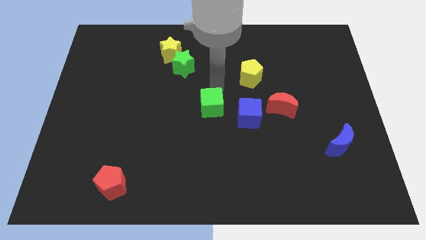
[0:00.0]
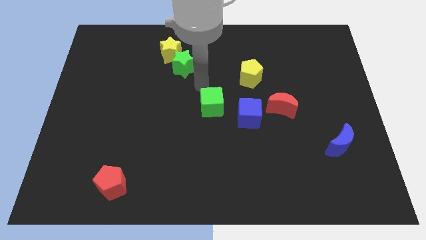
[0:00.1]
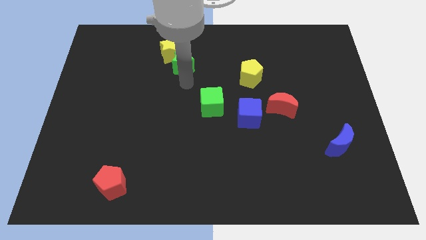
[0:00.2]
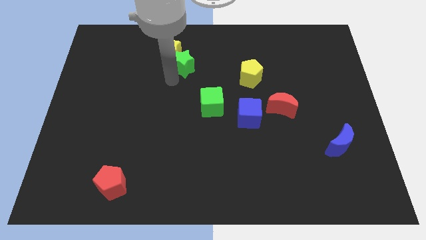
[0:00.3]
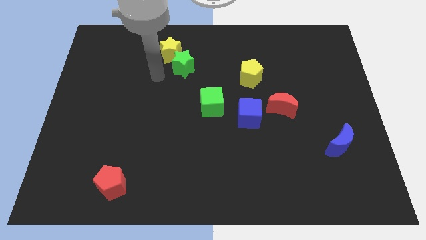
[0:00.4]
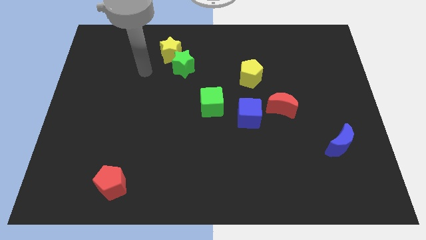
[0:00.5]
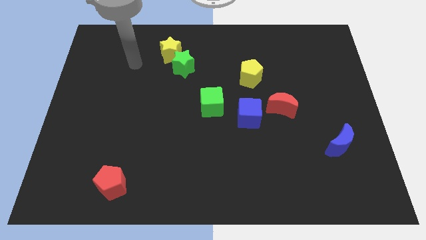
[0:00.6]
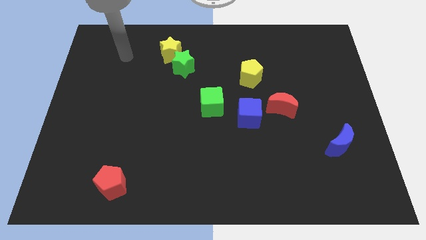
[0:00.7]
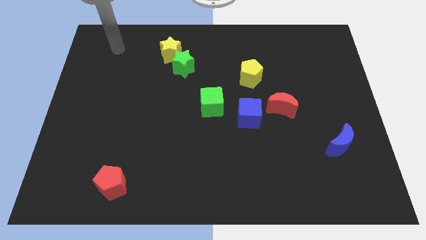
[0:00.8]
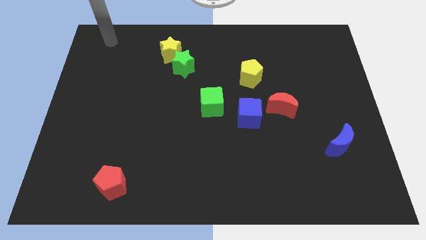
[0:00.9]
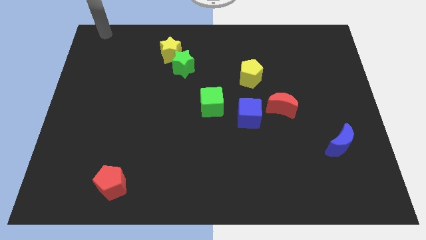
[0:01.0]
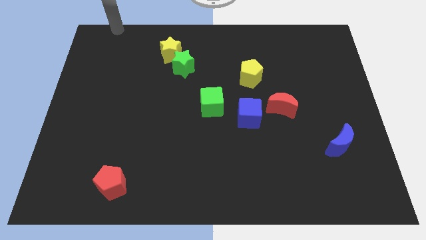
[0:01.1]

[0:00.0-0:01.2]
move your arm to the top left

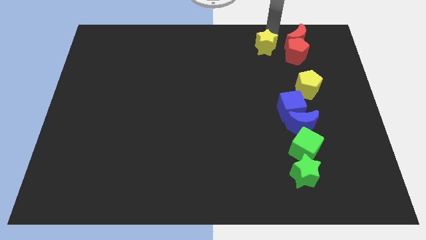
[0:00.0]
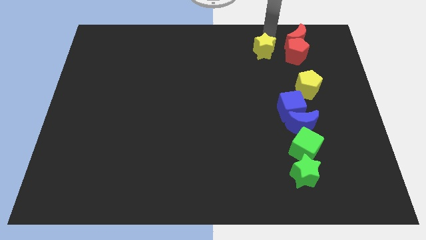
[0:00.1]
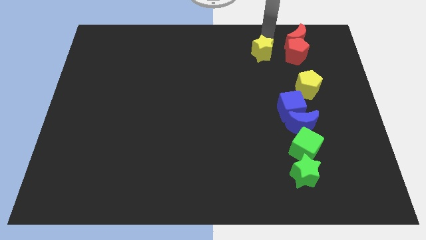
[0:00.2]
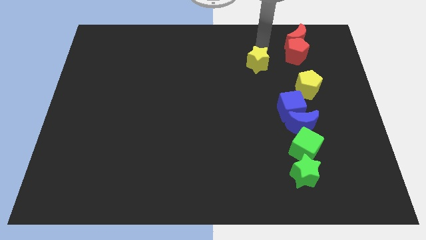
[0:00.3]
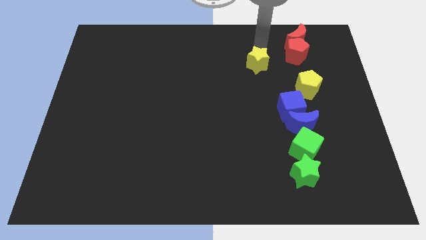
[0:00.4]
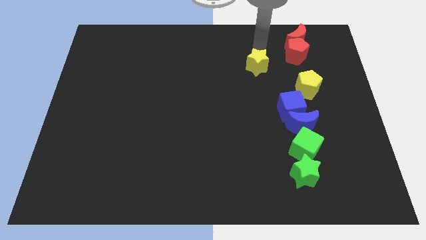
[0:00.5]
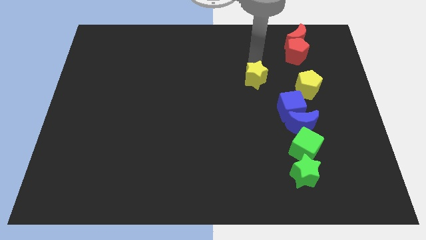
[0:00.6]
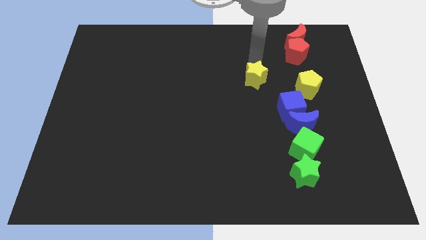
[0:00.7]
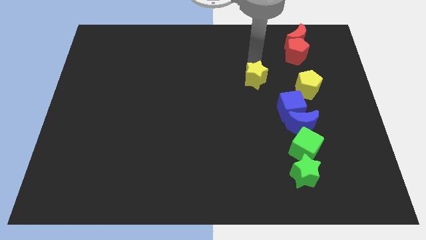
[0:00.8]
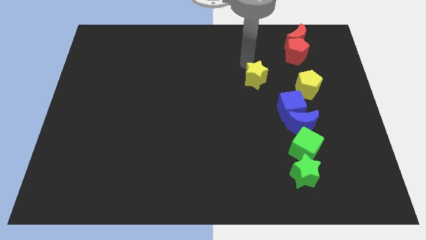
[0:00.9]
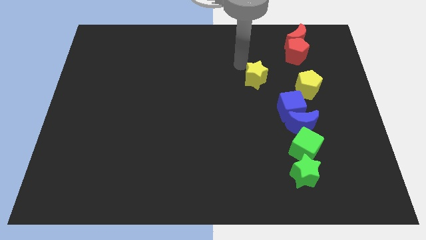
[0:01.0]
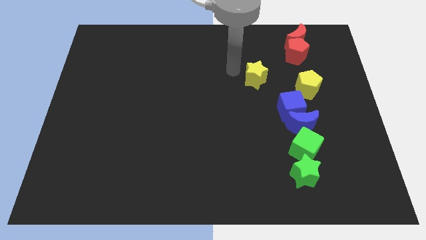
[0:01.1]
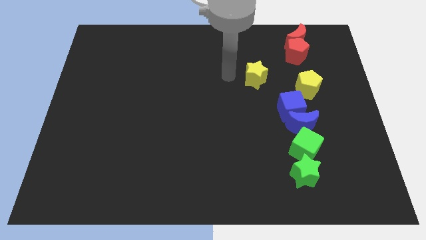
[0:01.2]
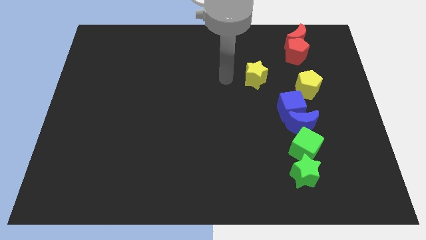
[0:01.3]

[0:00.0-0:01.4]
place the yellow star left to the yellow pentagon

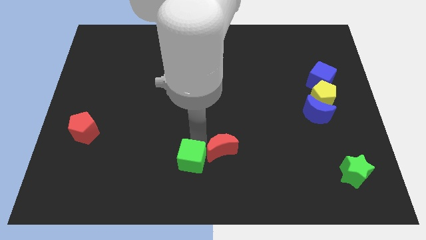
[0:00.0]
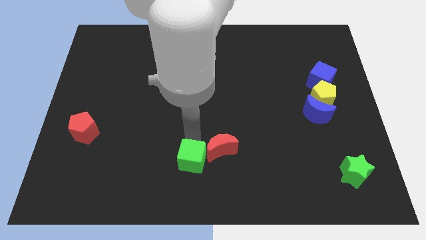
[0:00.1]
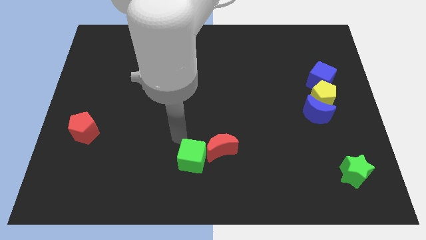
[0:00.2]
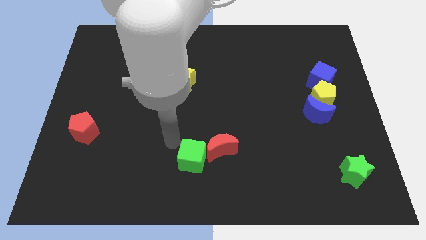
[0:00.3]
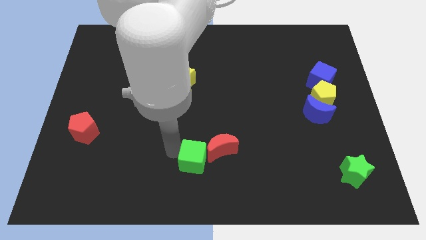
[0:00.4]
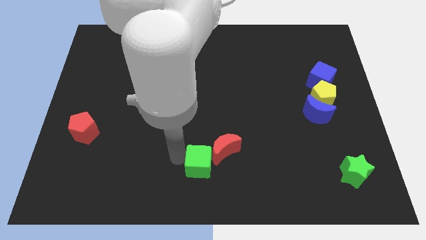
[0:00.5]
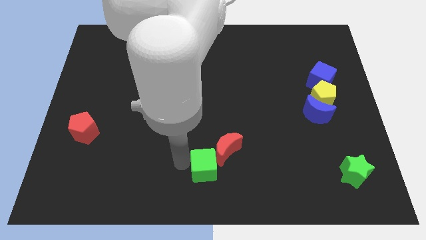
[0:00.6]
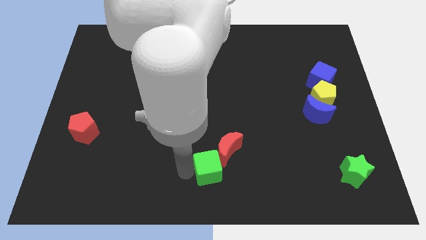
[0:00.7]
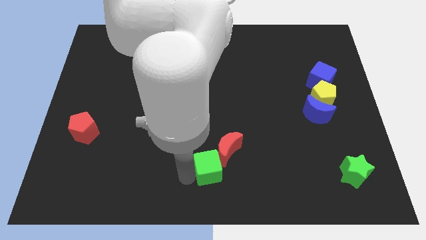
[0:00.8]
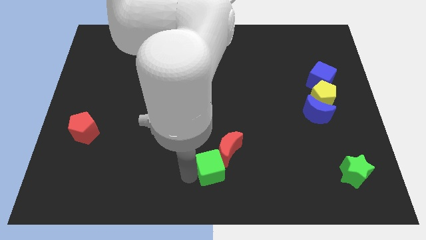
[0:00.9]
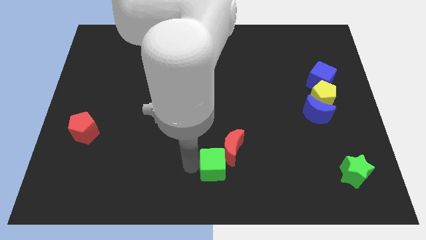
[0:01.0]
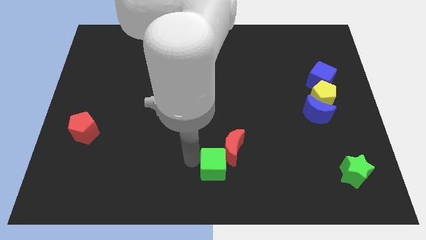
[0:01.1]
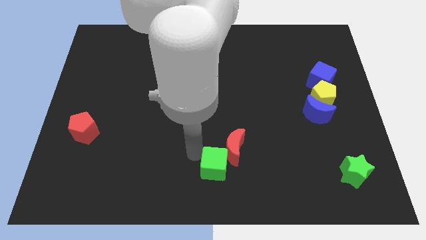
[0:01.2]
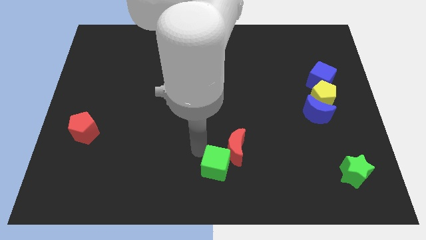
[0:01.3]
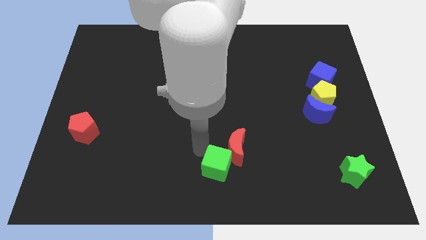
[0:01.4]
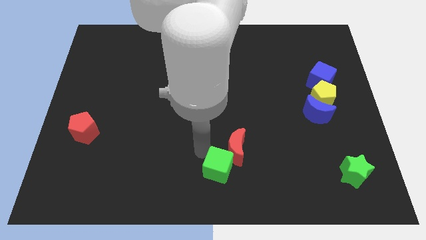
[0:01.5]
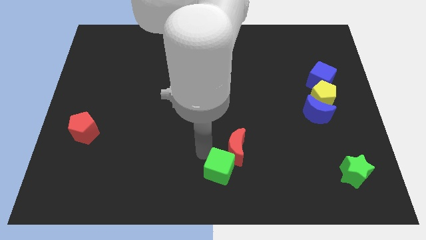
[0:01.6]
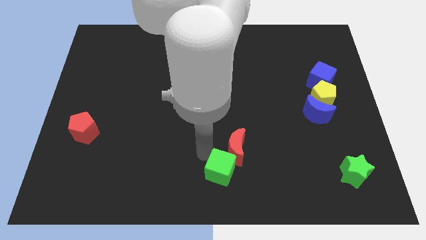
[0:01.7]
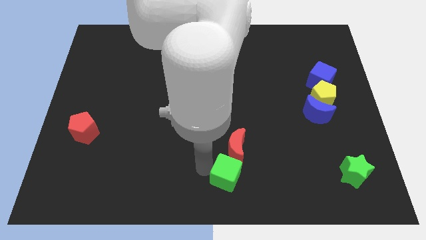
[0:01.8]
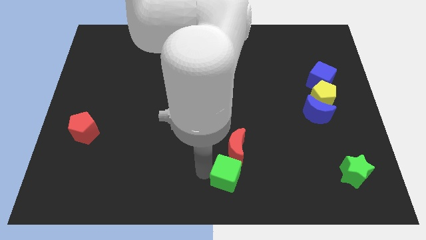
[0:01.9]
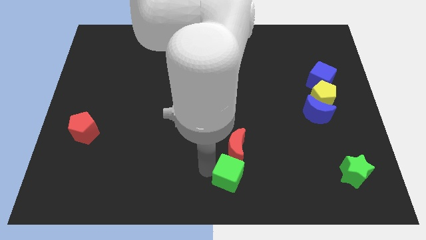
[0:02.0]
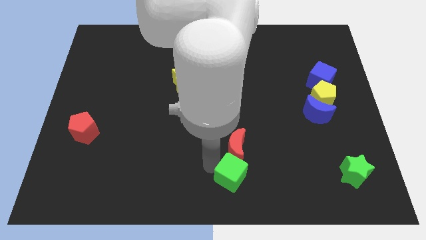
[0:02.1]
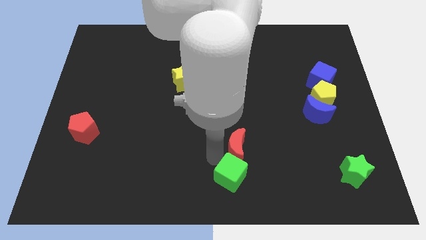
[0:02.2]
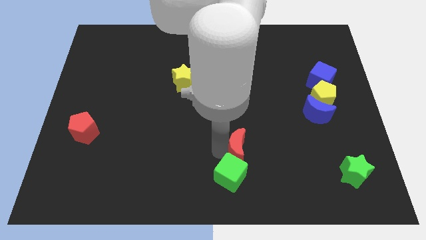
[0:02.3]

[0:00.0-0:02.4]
move the green cube below the red moon

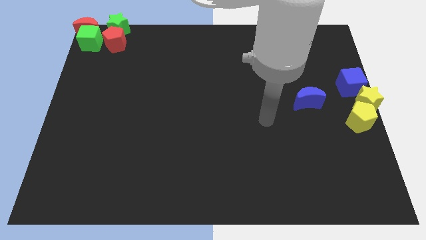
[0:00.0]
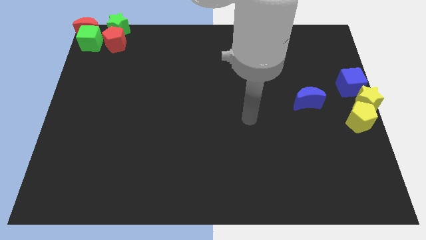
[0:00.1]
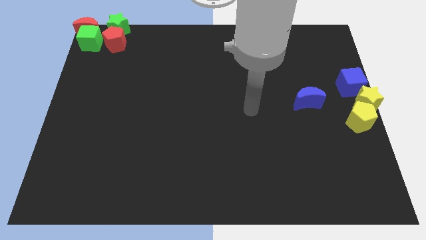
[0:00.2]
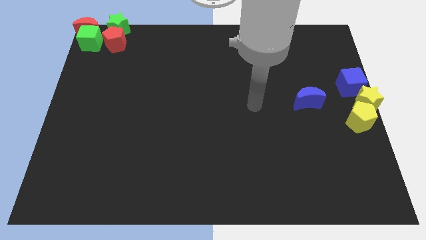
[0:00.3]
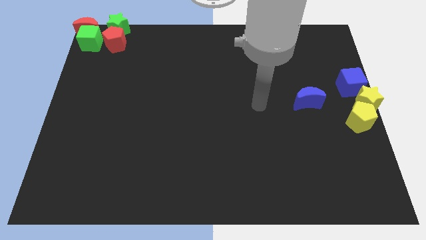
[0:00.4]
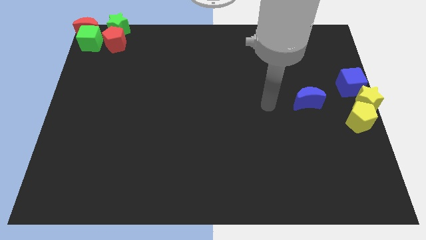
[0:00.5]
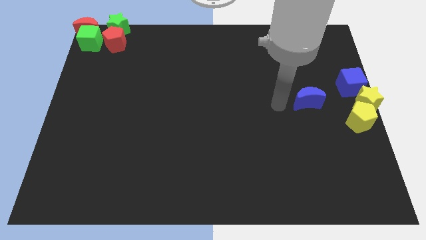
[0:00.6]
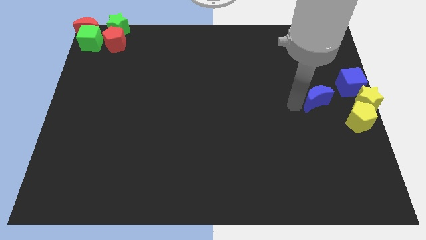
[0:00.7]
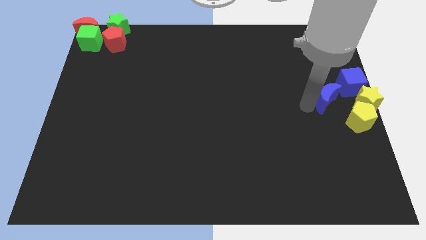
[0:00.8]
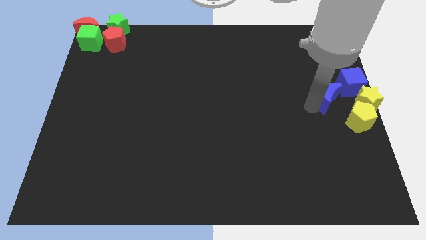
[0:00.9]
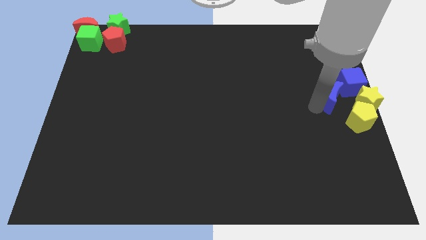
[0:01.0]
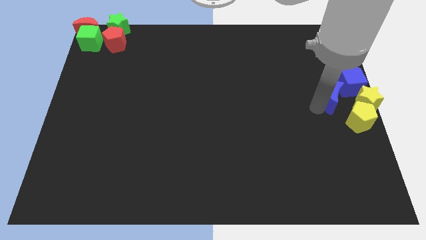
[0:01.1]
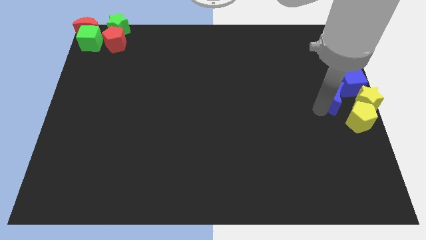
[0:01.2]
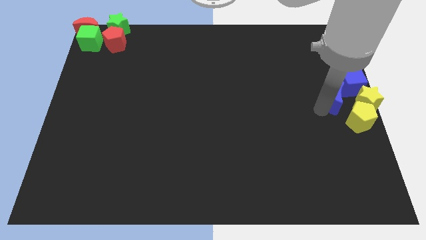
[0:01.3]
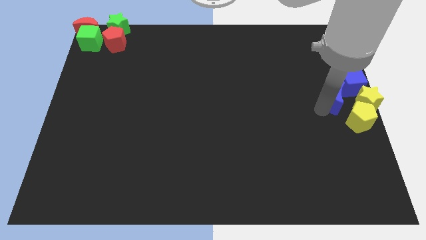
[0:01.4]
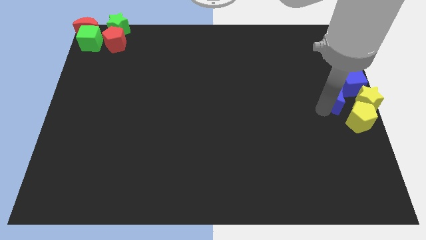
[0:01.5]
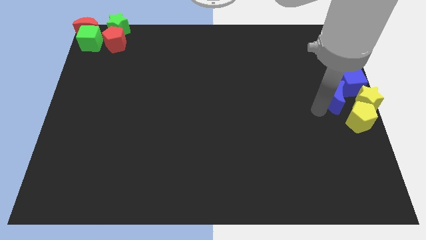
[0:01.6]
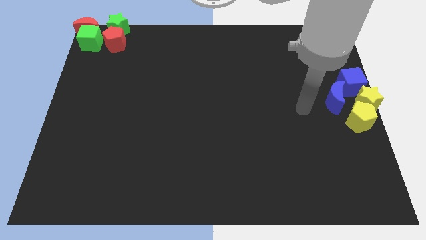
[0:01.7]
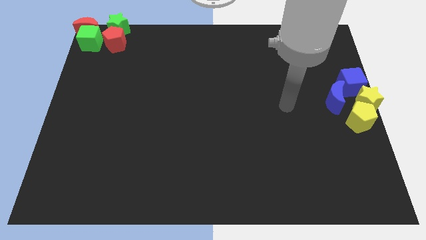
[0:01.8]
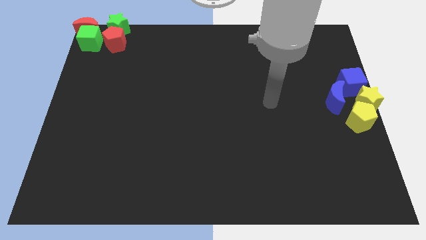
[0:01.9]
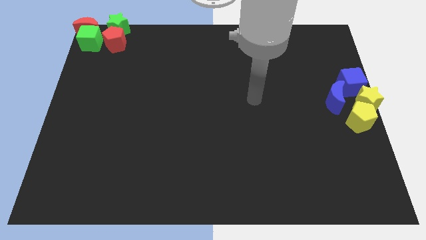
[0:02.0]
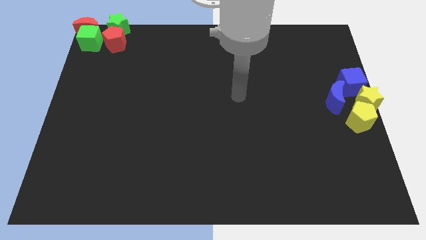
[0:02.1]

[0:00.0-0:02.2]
put the blue moon into the blue cube

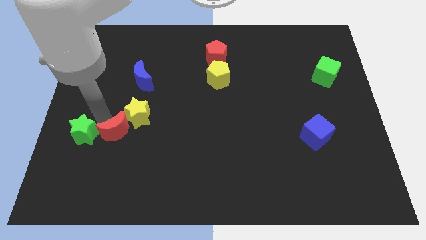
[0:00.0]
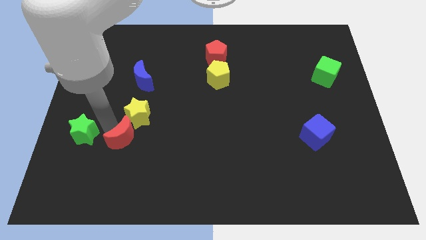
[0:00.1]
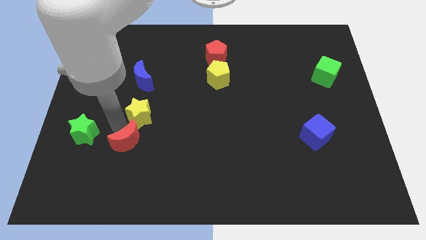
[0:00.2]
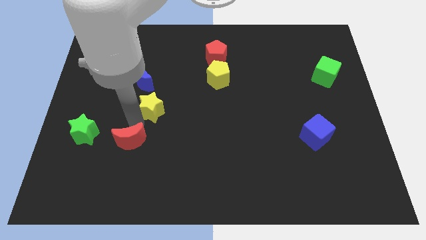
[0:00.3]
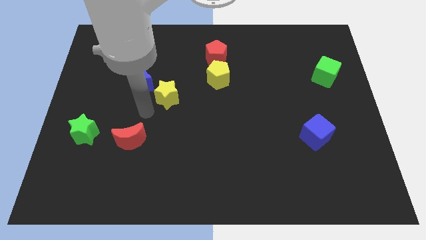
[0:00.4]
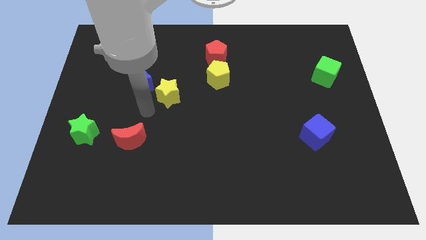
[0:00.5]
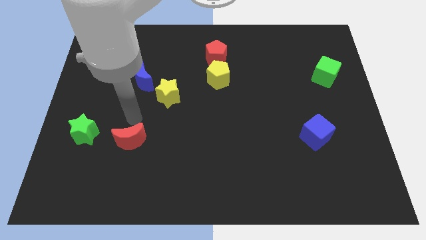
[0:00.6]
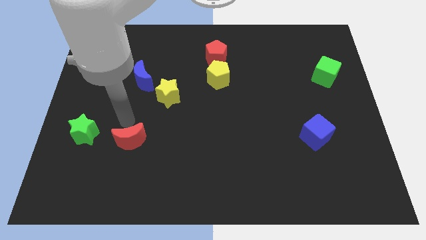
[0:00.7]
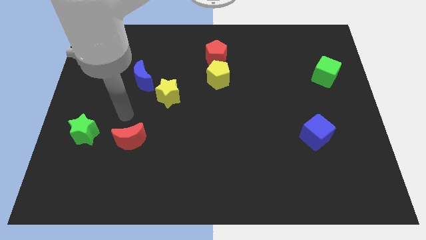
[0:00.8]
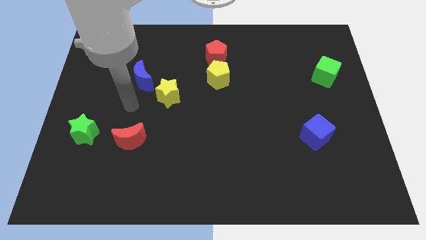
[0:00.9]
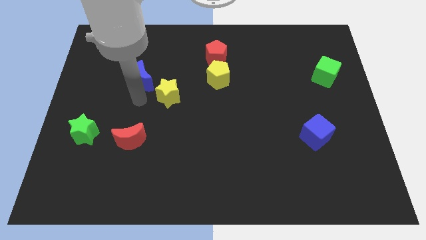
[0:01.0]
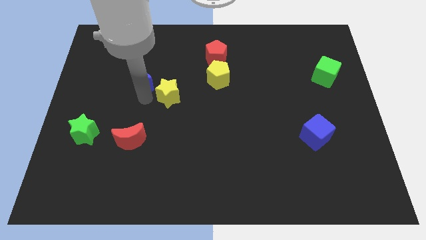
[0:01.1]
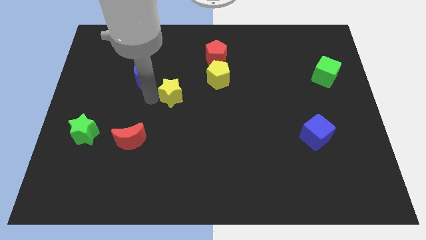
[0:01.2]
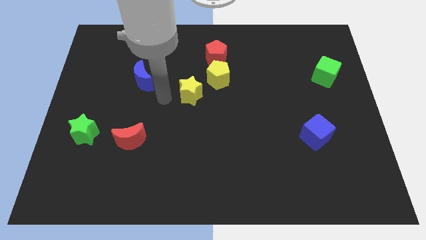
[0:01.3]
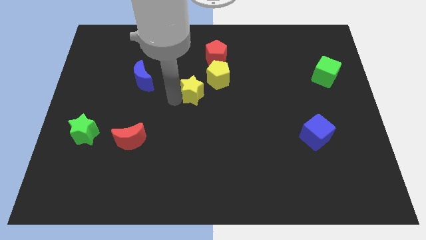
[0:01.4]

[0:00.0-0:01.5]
separate yellow star and red moon

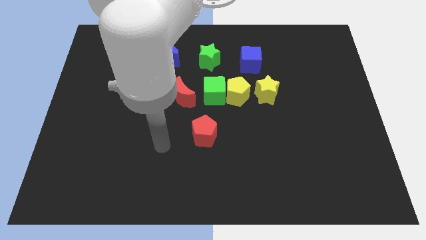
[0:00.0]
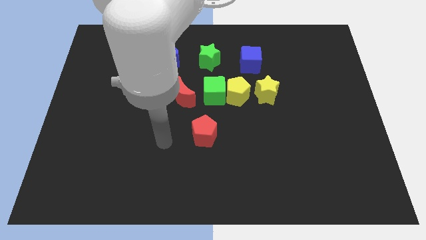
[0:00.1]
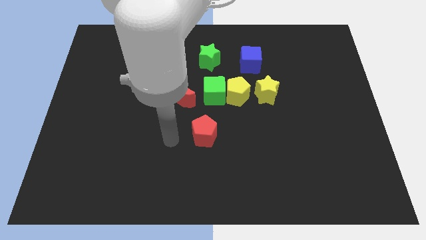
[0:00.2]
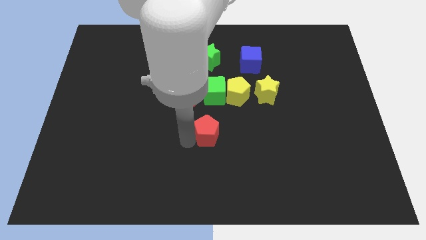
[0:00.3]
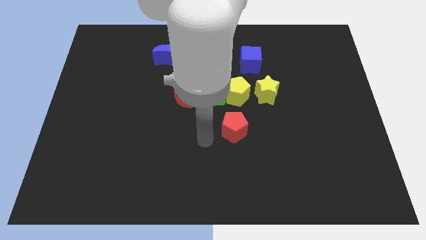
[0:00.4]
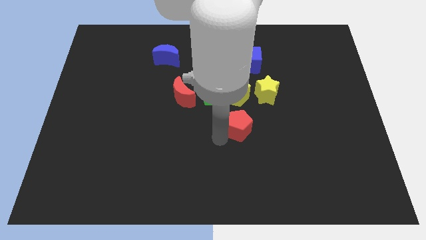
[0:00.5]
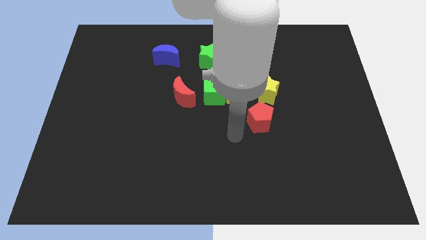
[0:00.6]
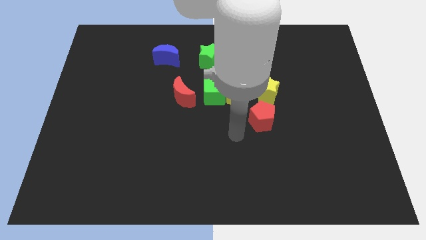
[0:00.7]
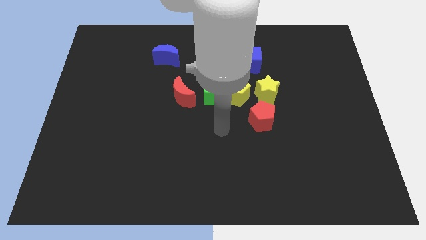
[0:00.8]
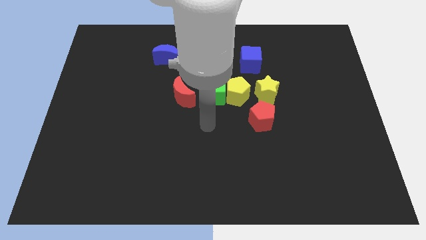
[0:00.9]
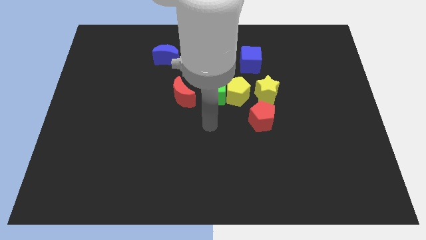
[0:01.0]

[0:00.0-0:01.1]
move the red pentagon down to the yellow star
